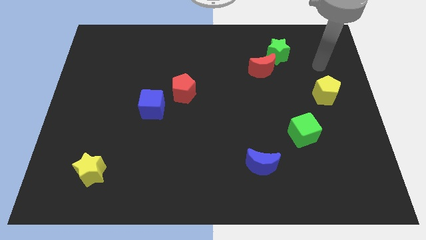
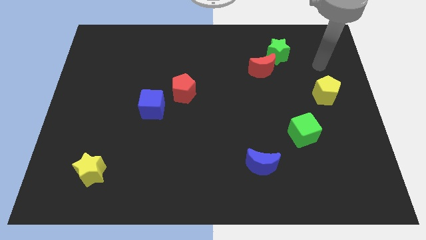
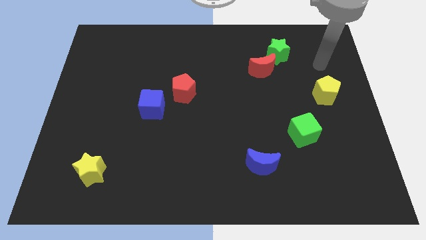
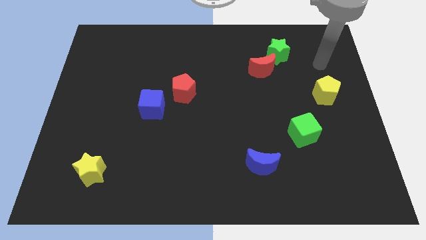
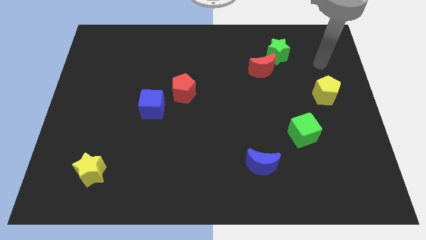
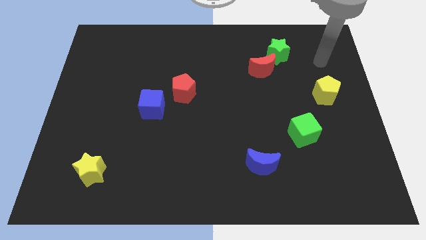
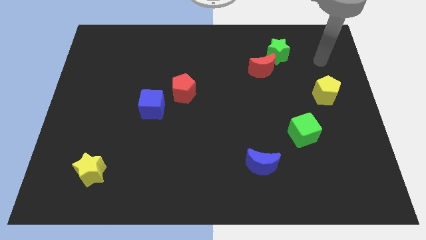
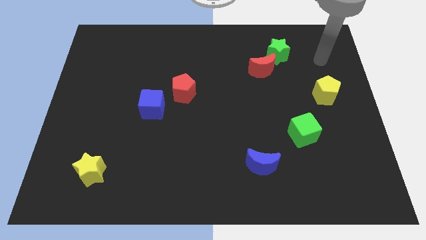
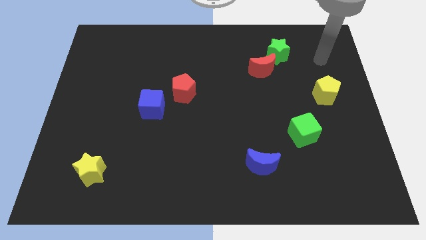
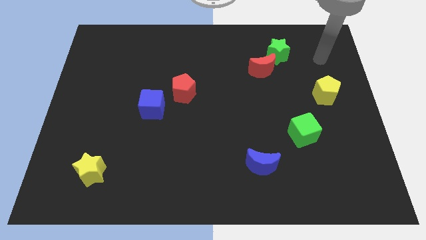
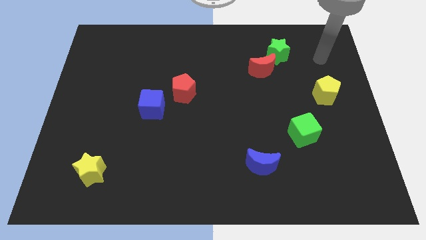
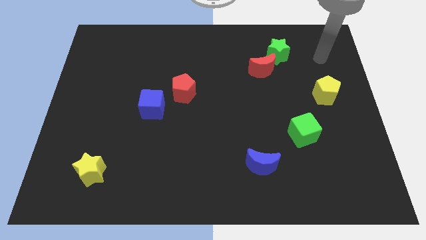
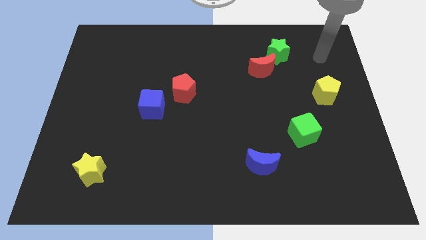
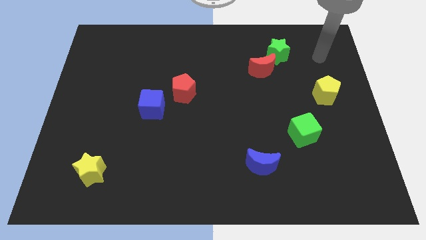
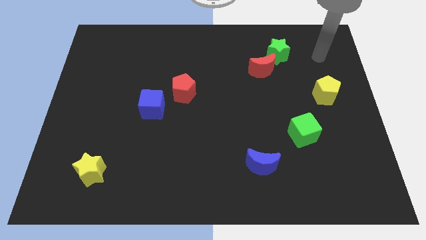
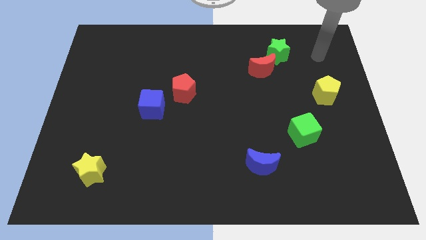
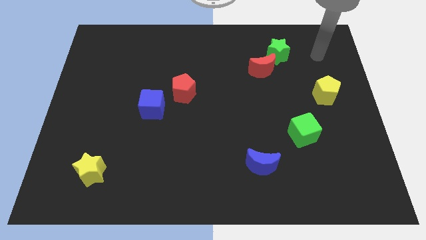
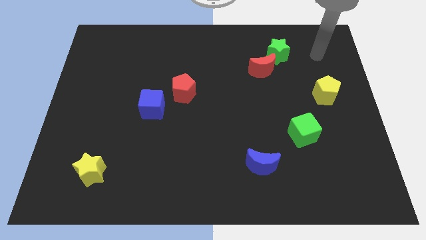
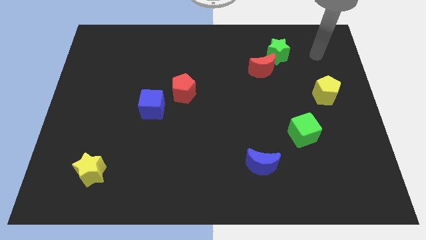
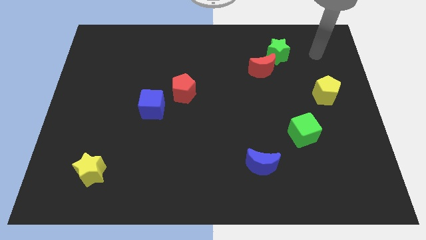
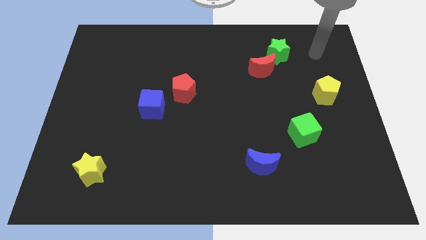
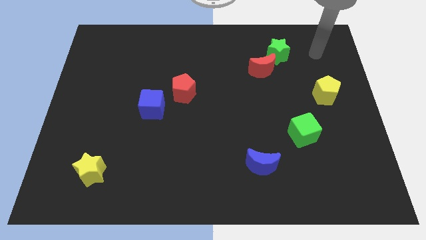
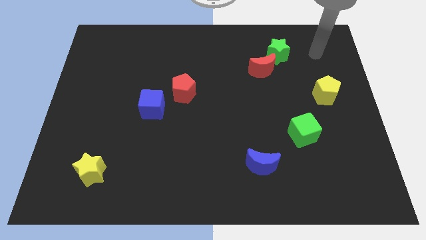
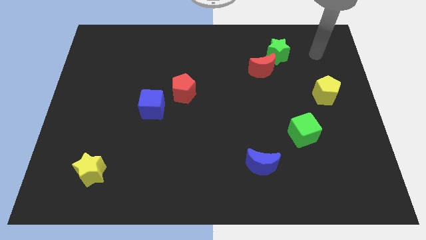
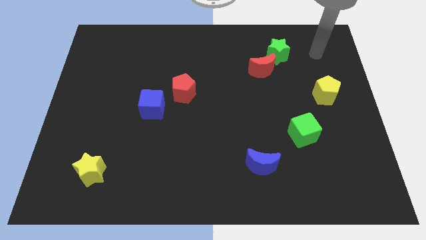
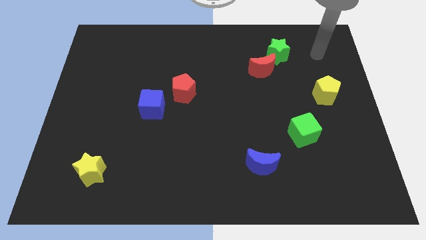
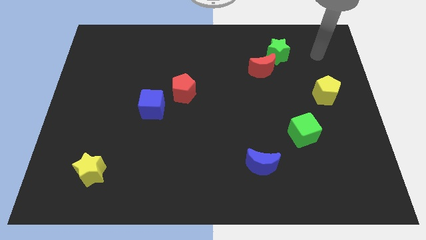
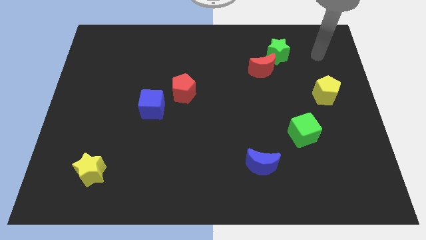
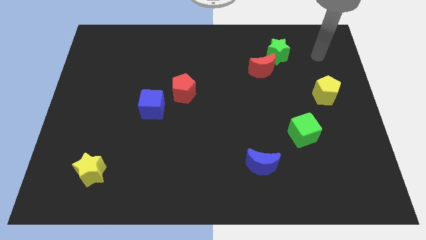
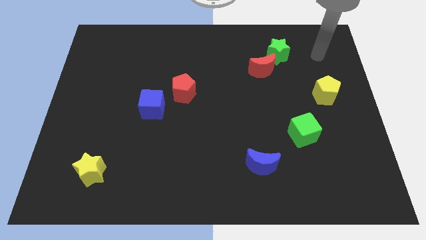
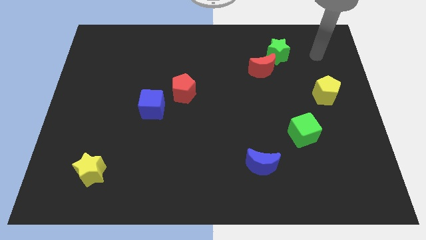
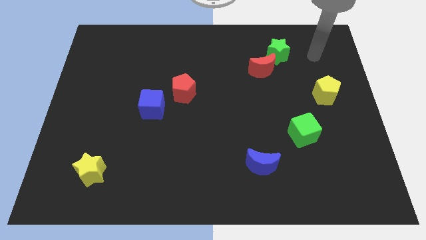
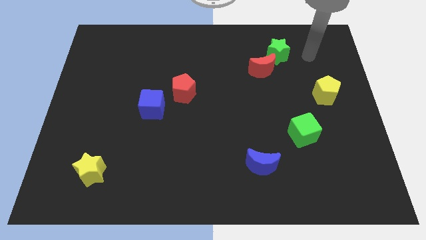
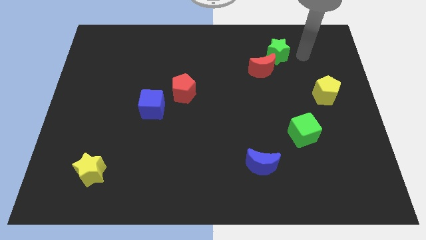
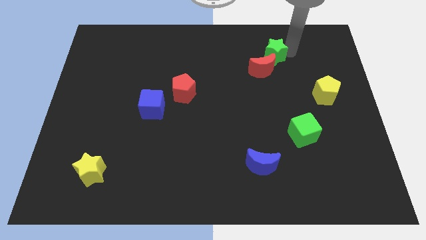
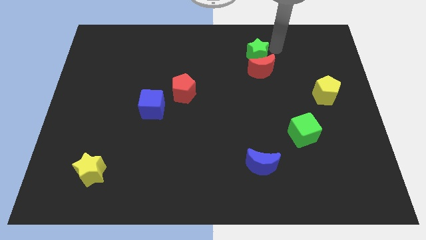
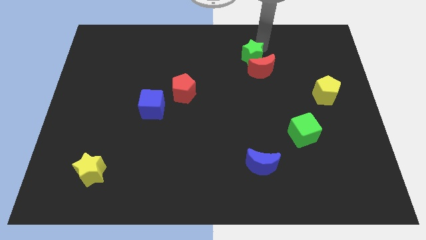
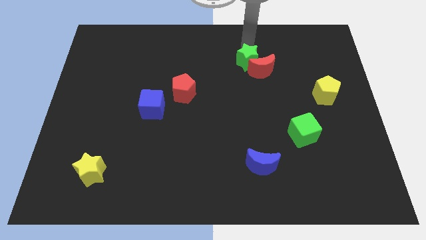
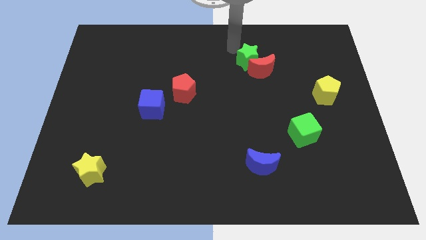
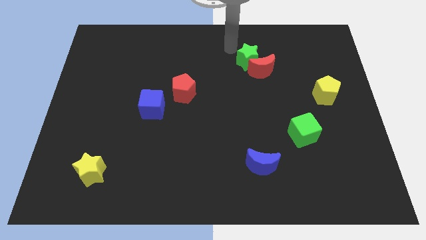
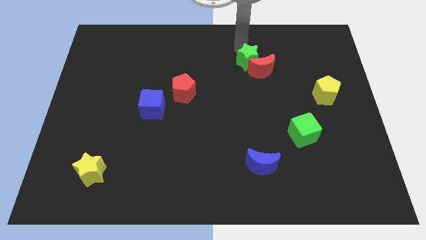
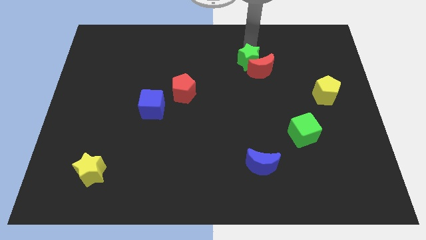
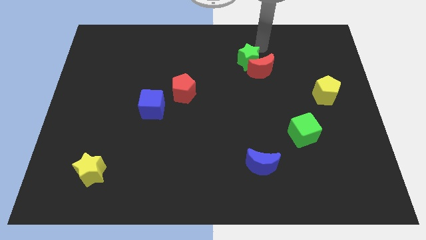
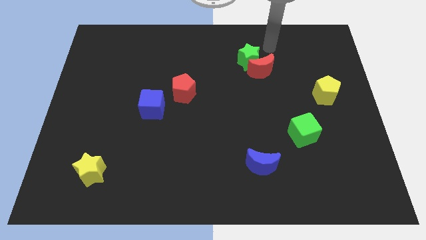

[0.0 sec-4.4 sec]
move the green star slightly to the left

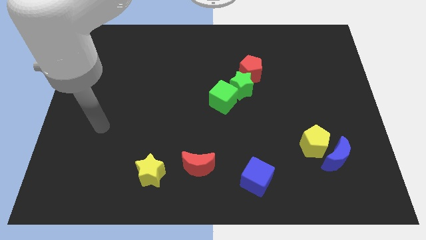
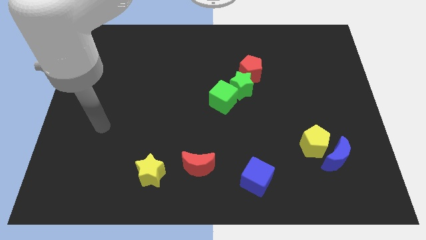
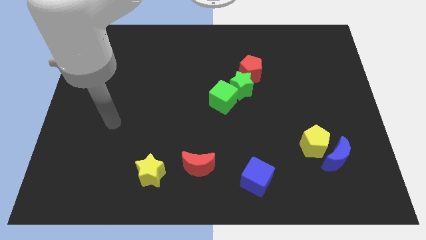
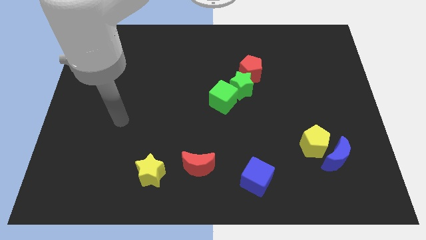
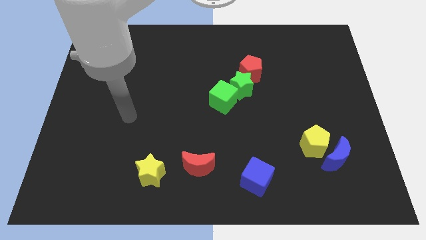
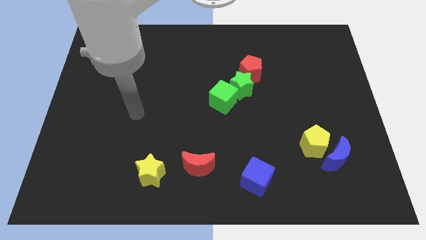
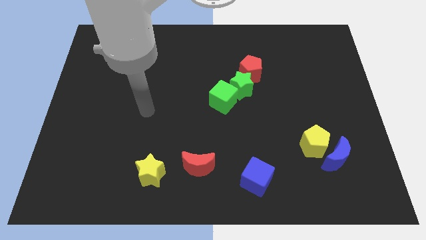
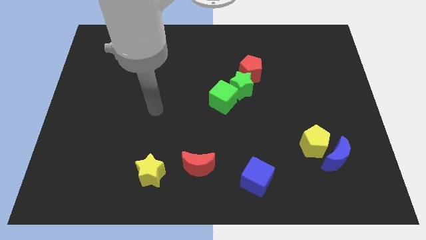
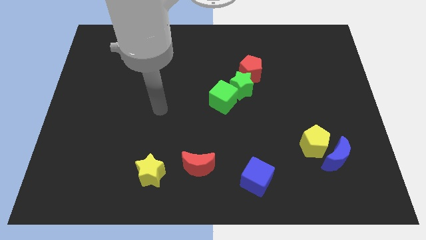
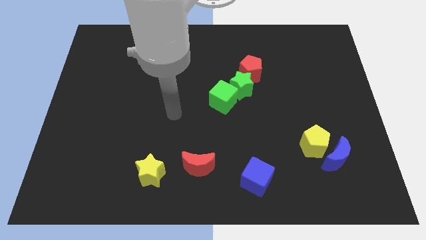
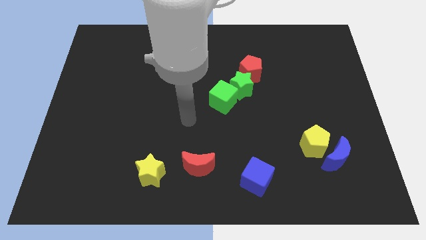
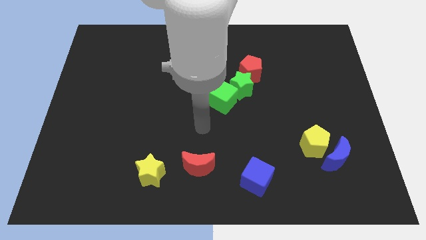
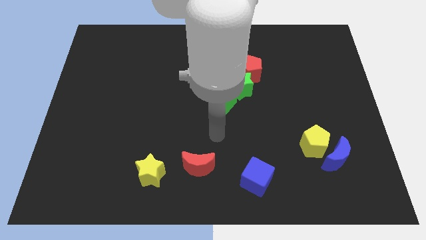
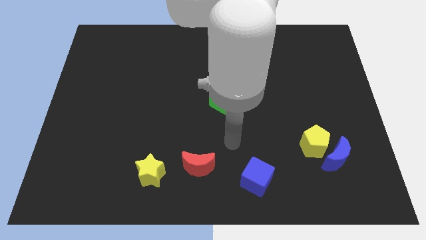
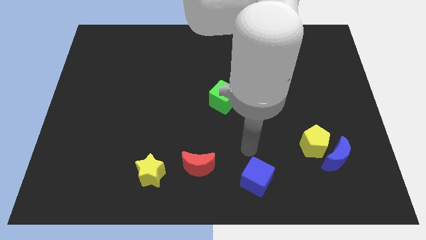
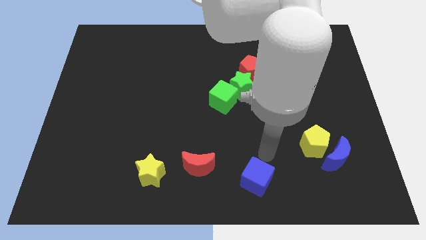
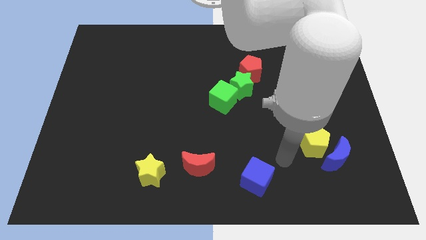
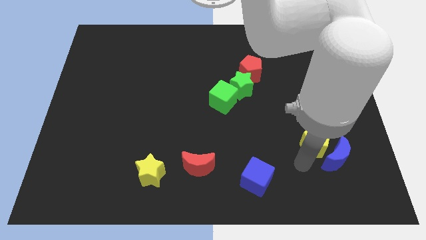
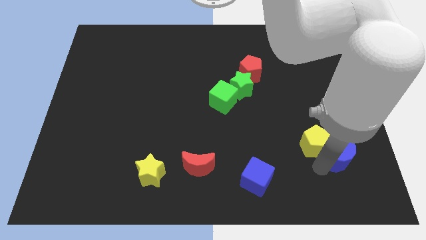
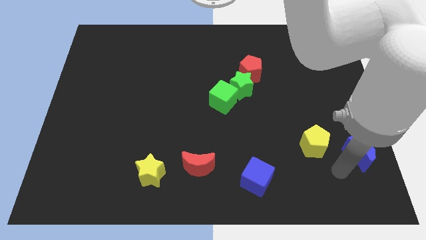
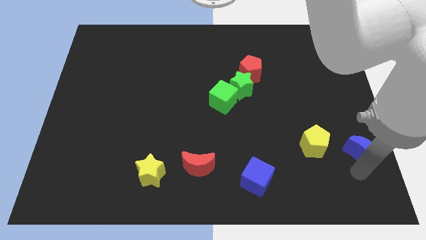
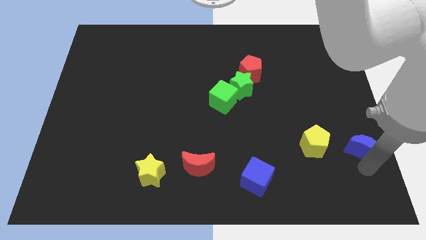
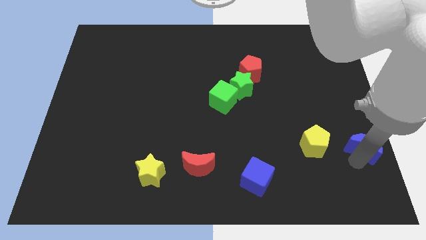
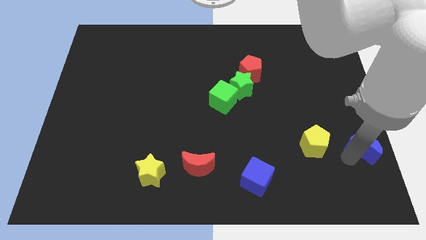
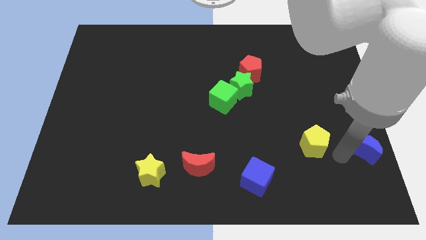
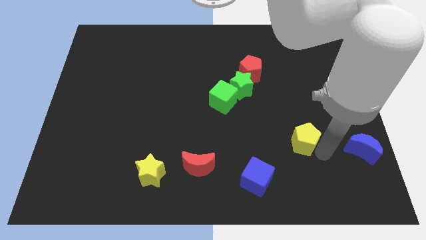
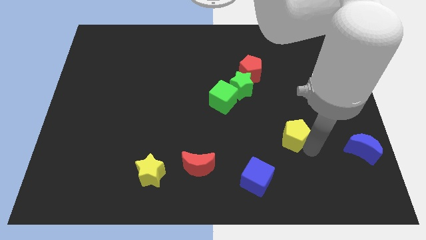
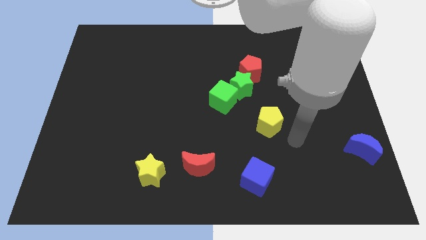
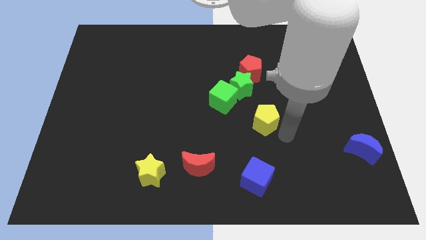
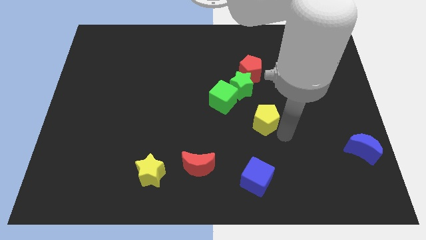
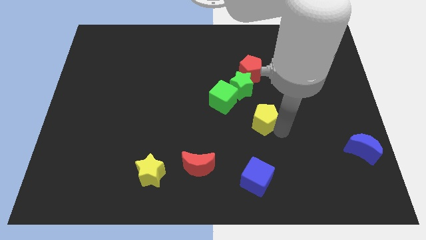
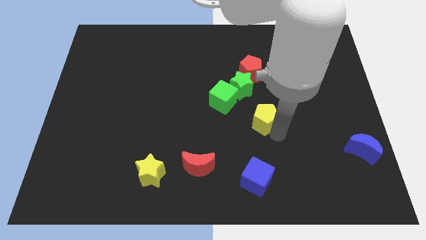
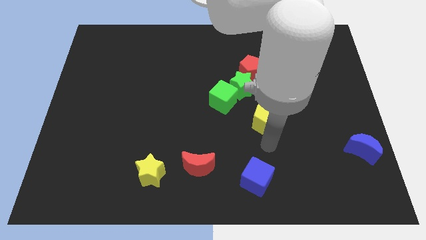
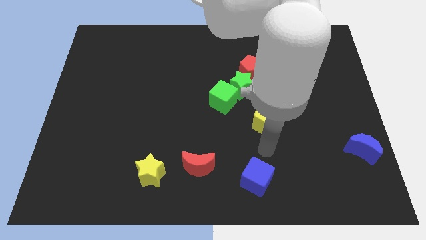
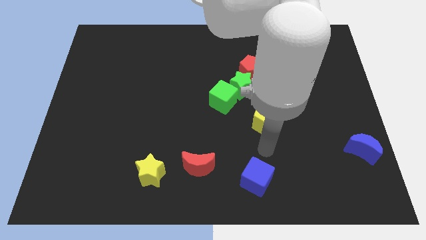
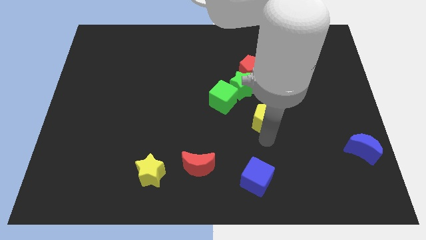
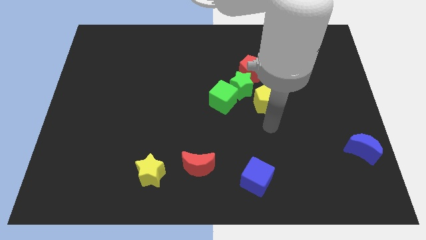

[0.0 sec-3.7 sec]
separate blue moon and yellow pentagon

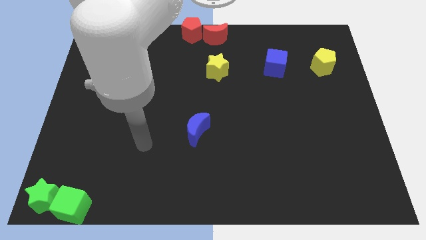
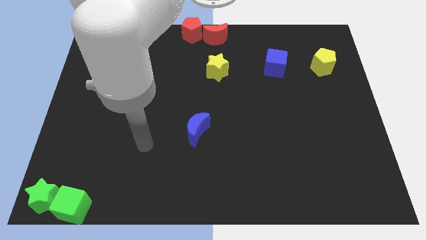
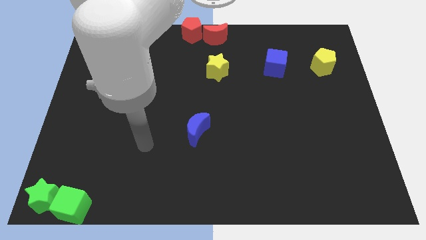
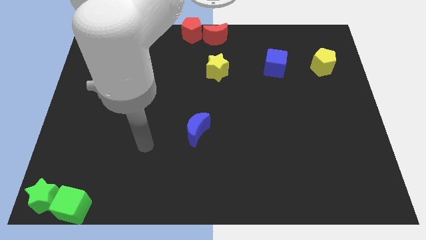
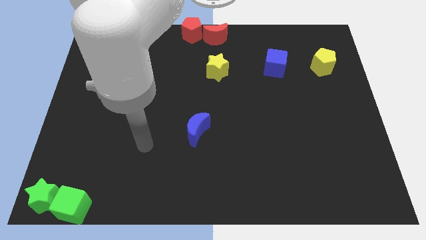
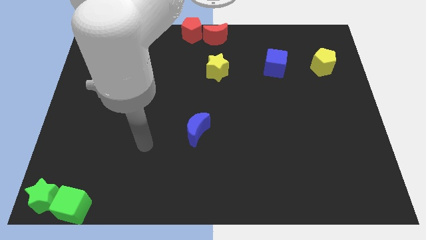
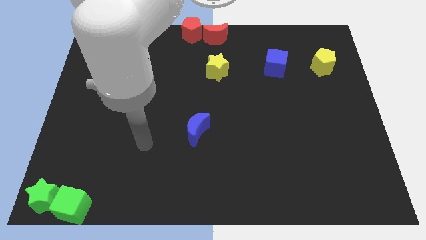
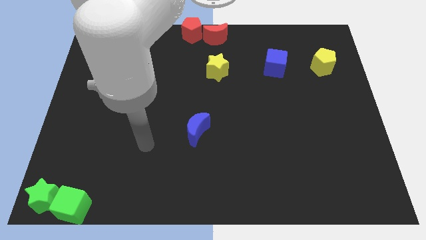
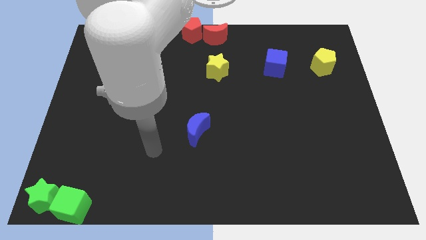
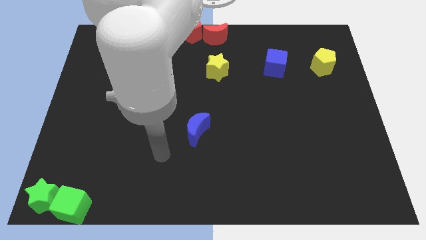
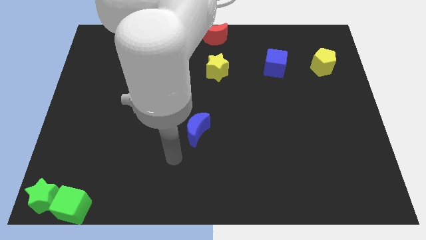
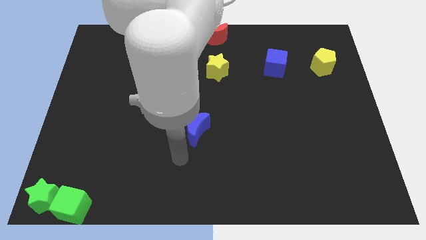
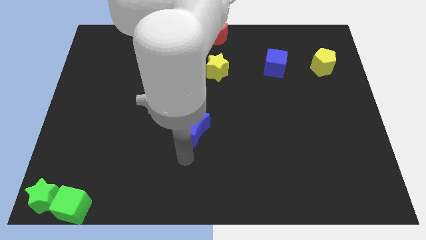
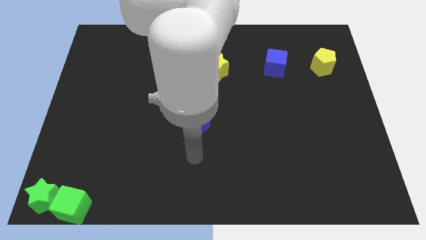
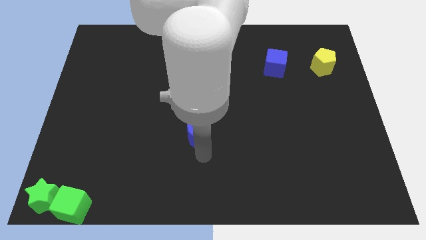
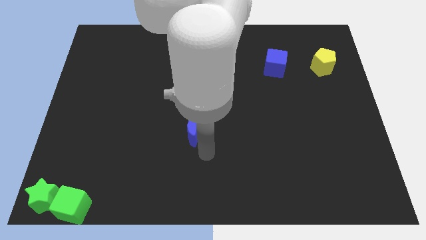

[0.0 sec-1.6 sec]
move your arm to the bottom of blue moon
